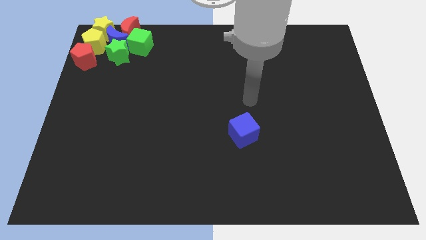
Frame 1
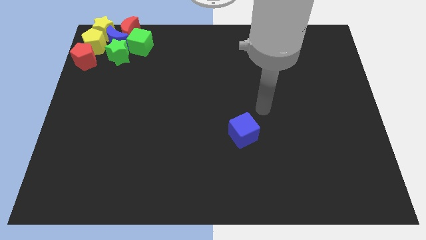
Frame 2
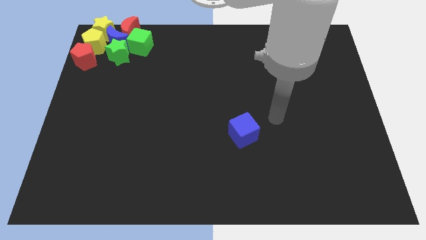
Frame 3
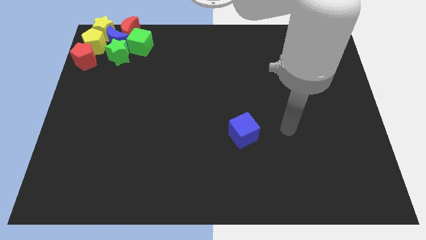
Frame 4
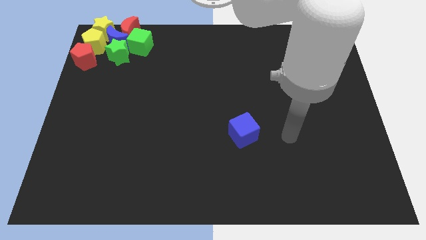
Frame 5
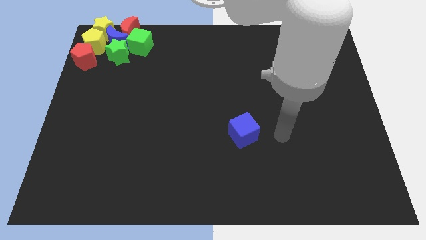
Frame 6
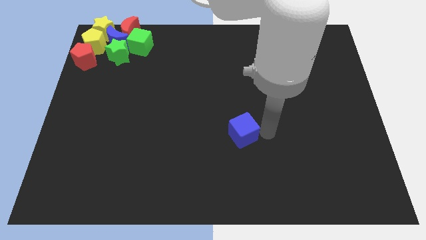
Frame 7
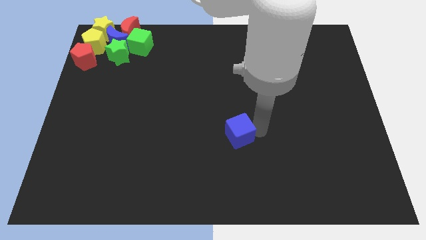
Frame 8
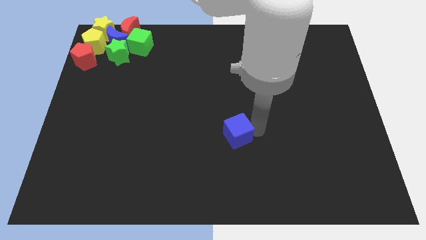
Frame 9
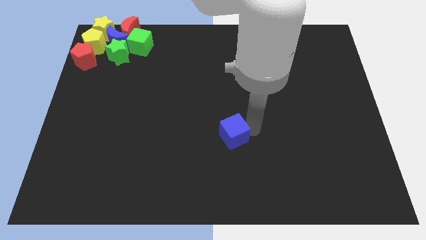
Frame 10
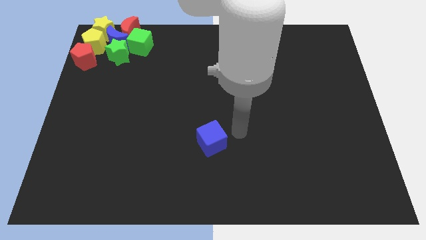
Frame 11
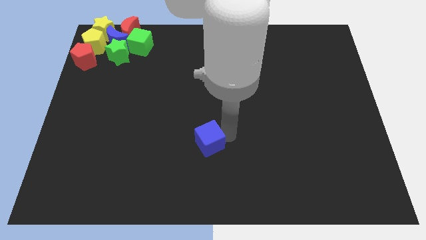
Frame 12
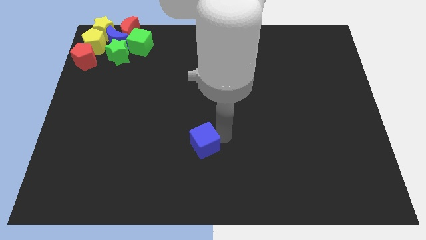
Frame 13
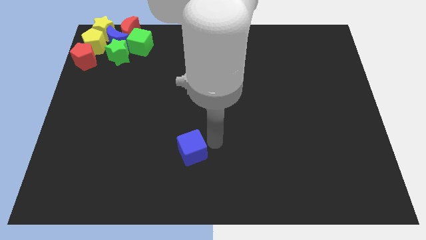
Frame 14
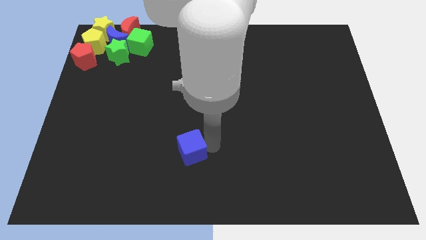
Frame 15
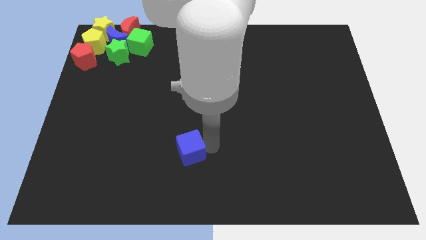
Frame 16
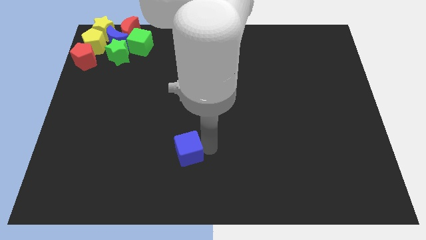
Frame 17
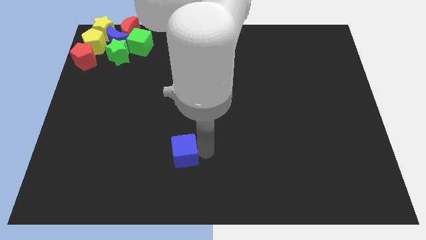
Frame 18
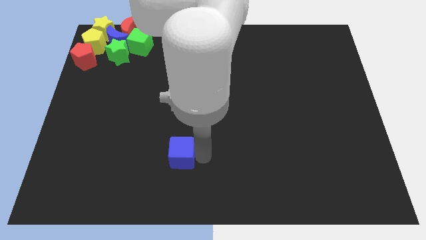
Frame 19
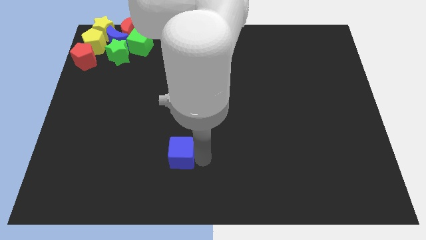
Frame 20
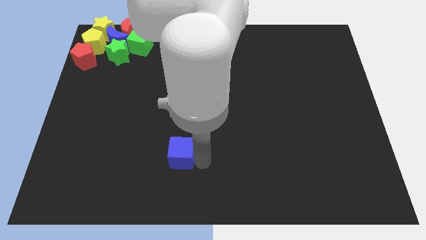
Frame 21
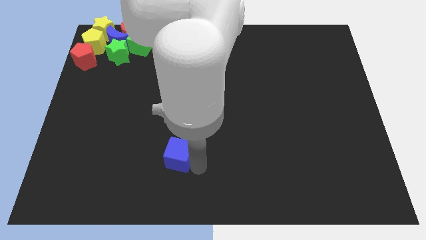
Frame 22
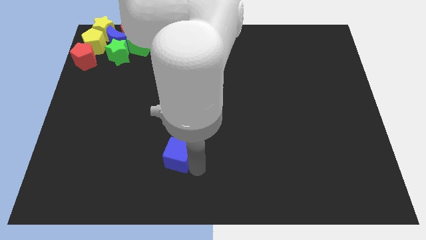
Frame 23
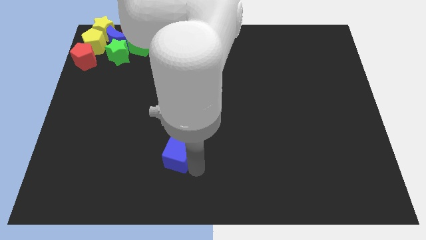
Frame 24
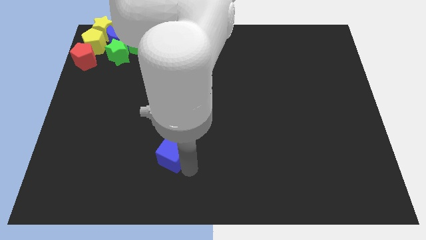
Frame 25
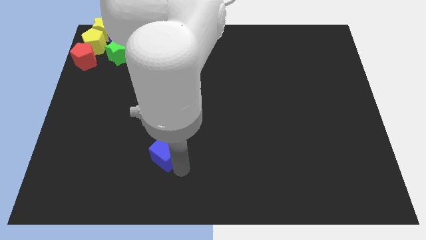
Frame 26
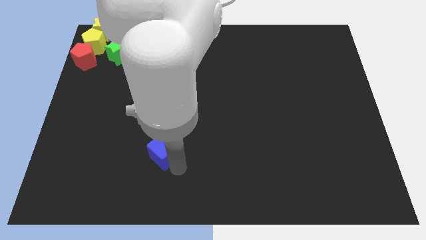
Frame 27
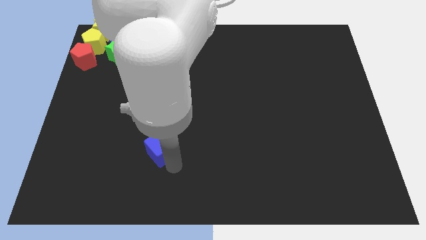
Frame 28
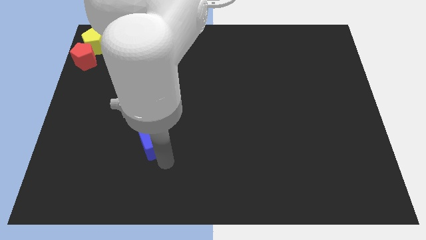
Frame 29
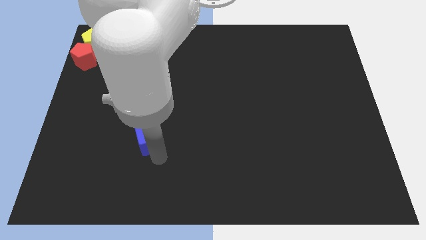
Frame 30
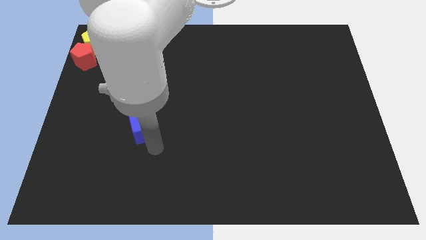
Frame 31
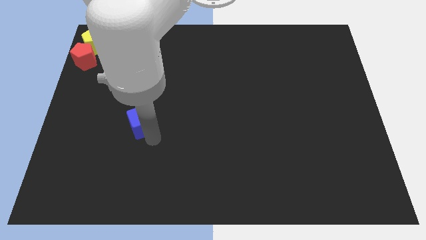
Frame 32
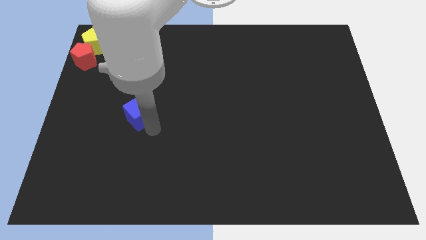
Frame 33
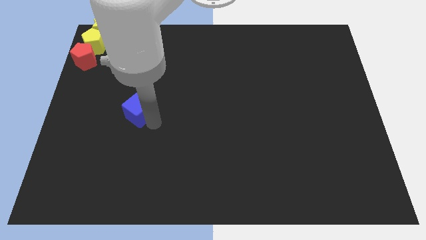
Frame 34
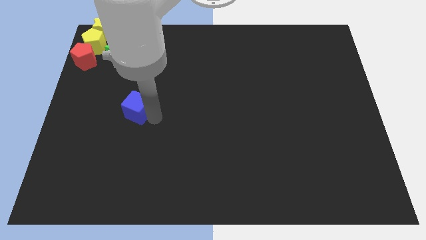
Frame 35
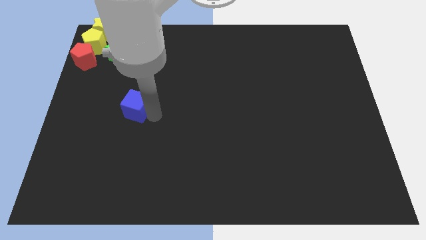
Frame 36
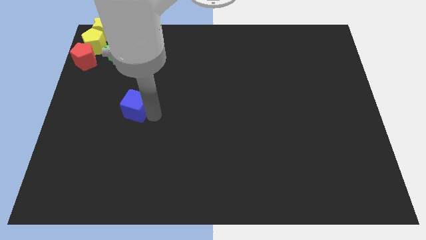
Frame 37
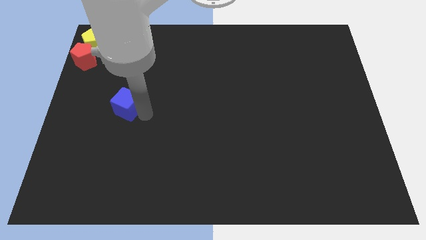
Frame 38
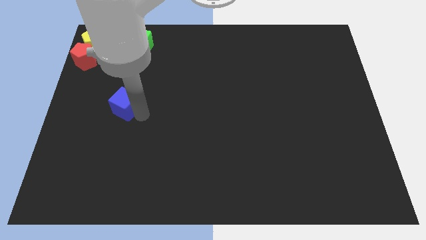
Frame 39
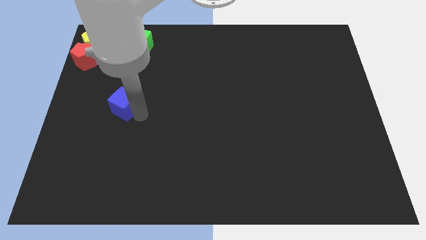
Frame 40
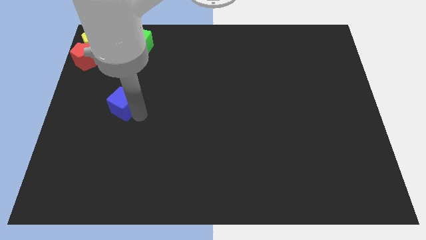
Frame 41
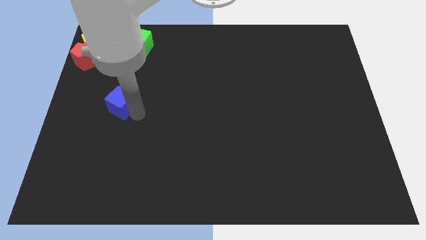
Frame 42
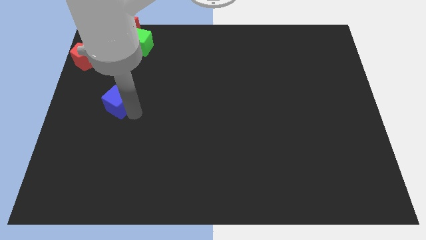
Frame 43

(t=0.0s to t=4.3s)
move the blue cube to the vertical bottom side of the green star

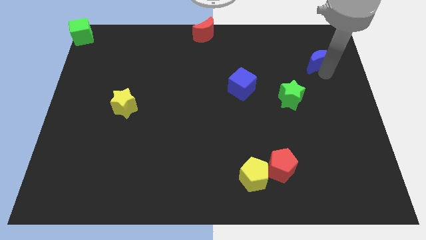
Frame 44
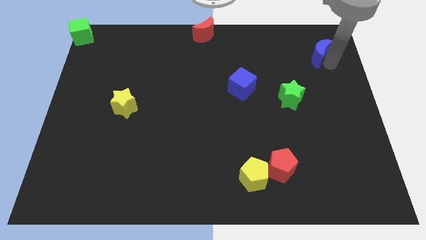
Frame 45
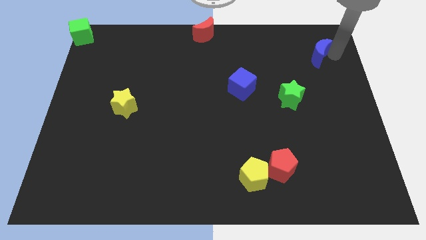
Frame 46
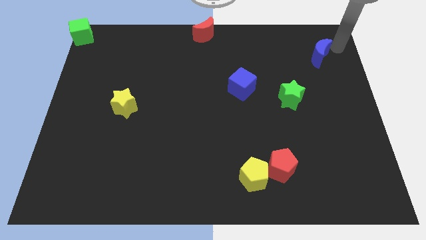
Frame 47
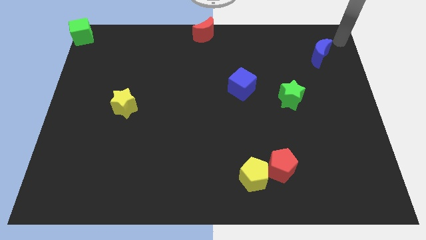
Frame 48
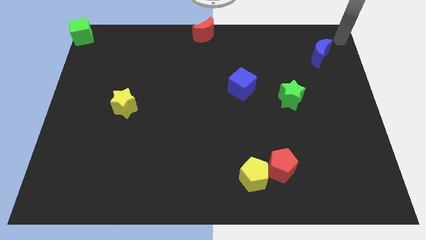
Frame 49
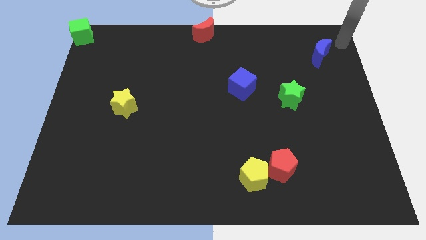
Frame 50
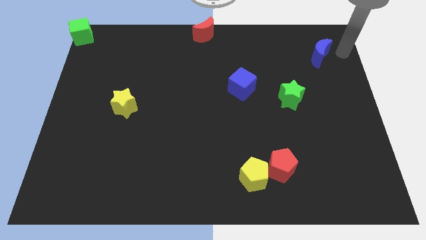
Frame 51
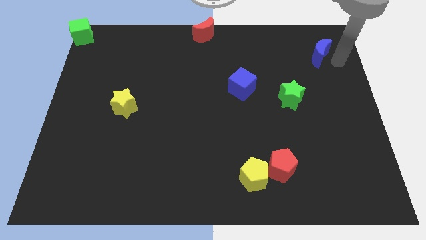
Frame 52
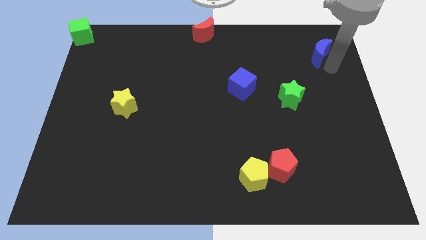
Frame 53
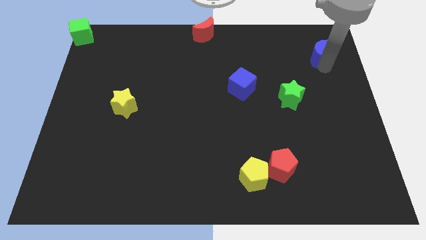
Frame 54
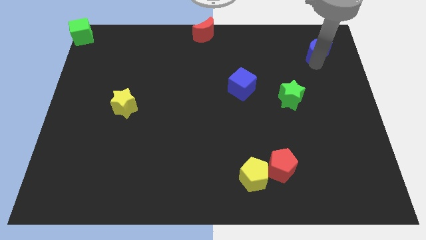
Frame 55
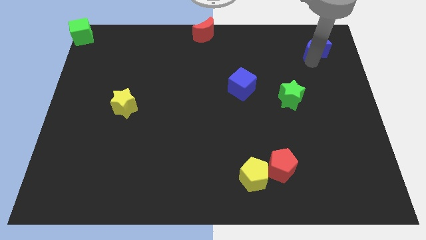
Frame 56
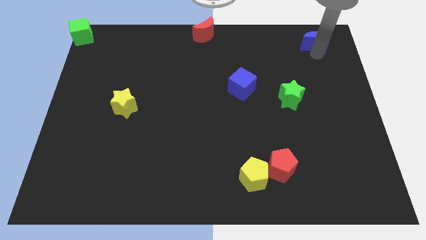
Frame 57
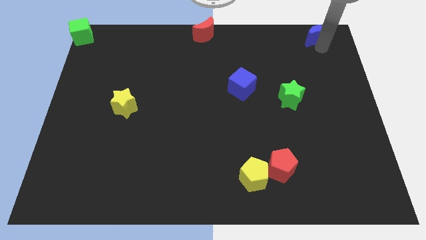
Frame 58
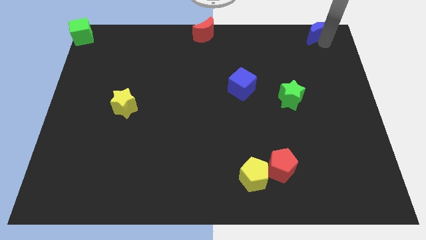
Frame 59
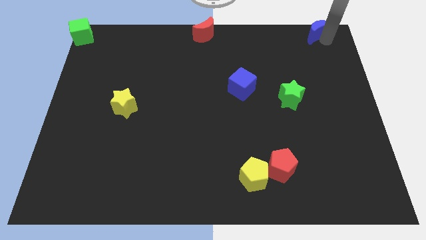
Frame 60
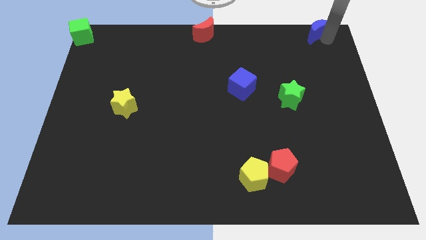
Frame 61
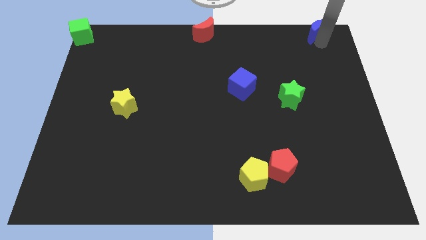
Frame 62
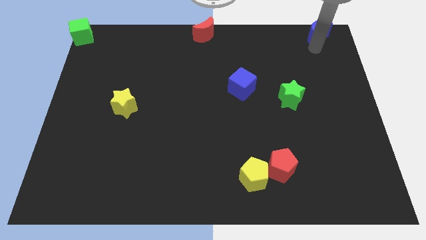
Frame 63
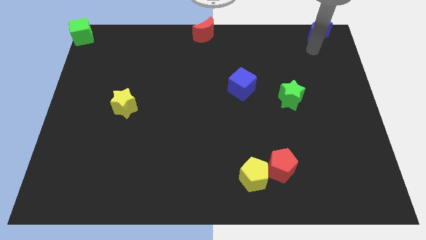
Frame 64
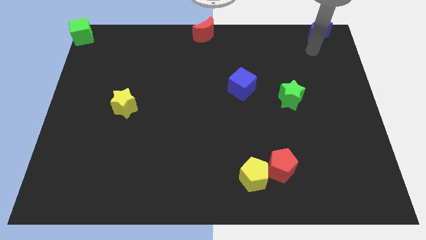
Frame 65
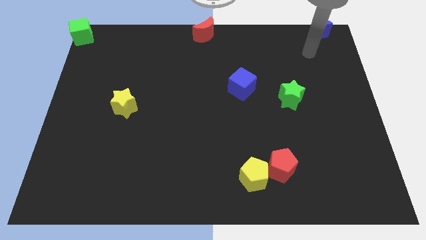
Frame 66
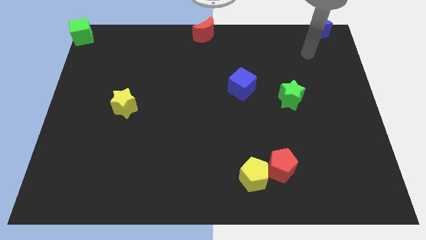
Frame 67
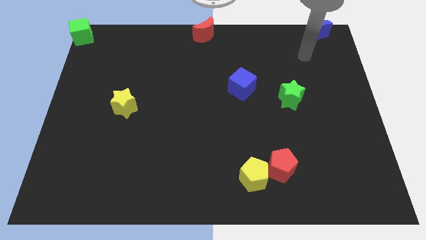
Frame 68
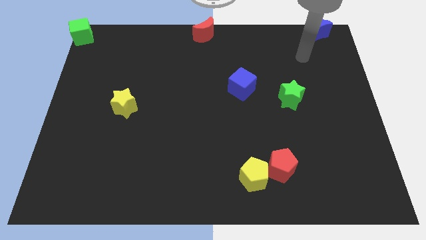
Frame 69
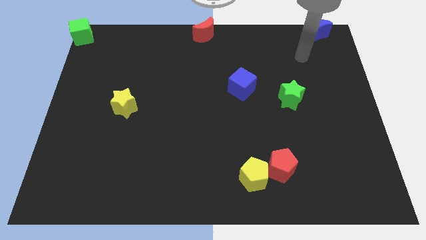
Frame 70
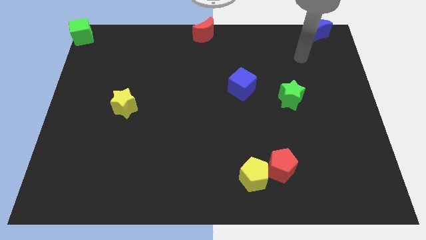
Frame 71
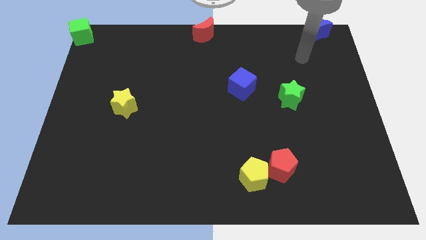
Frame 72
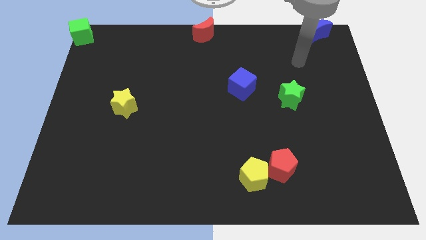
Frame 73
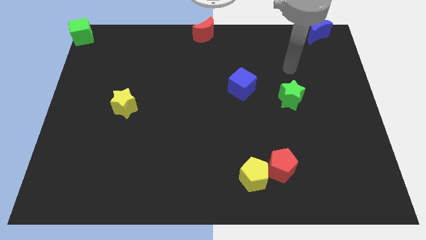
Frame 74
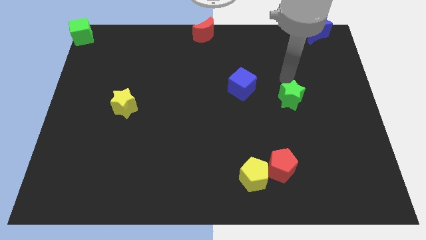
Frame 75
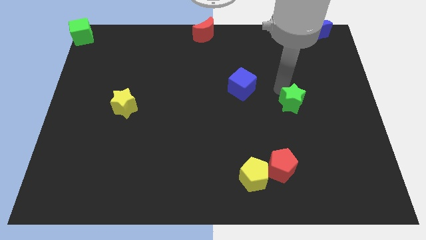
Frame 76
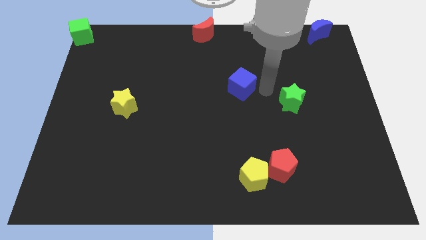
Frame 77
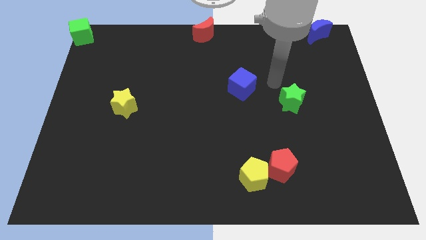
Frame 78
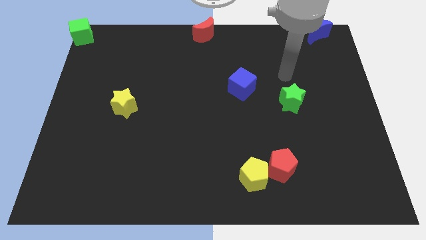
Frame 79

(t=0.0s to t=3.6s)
move the blue moon to the top right

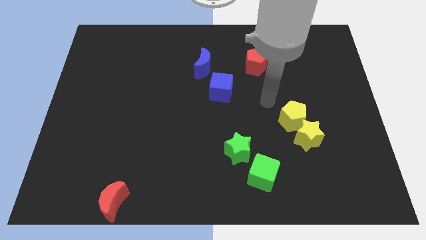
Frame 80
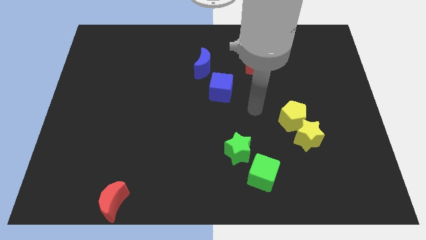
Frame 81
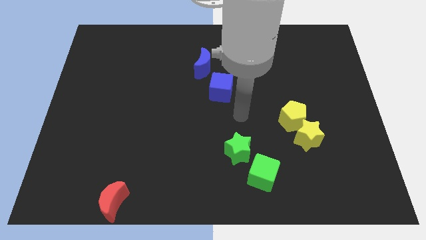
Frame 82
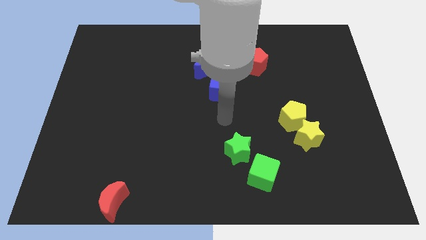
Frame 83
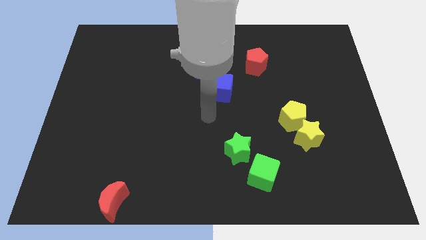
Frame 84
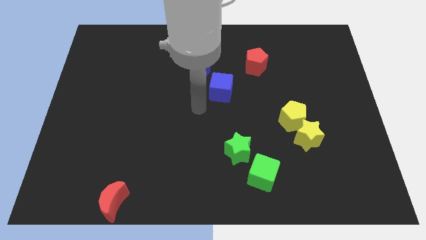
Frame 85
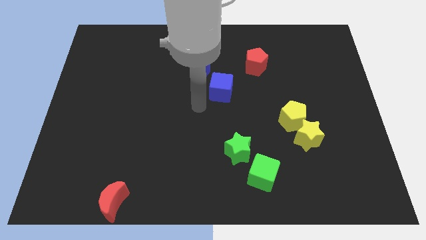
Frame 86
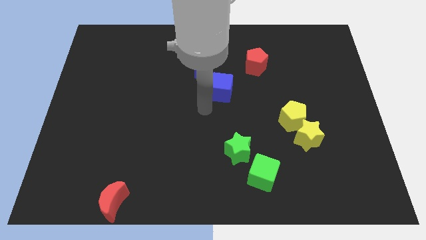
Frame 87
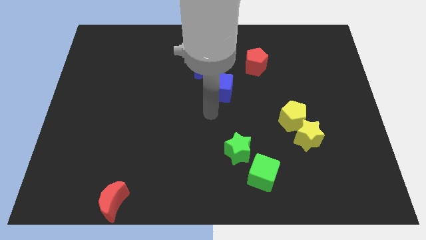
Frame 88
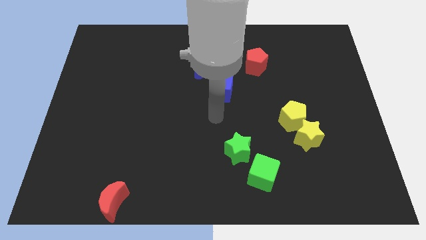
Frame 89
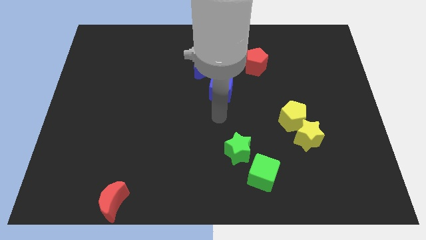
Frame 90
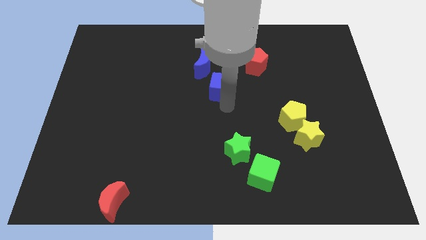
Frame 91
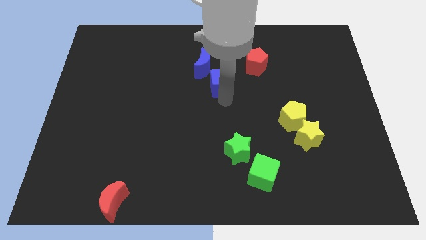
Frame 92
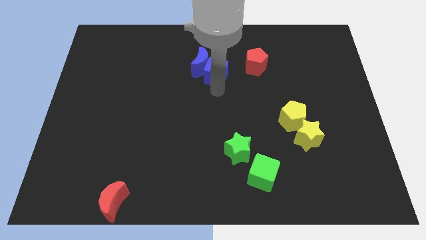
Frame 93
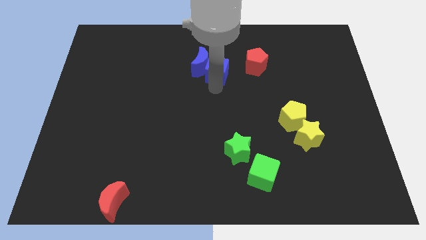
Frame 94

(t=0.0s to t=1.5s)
move the blue cube into the blue crescent
